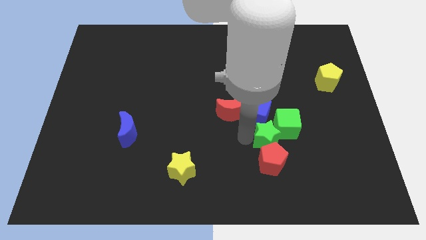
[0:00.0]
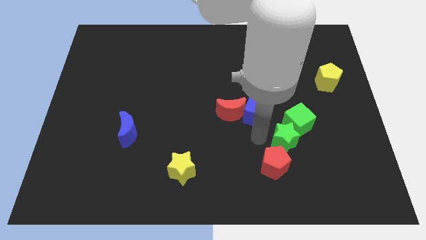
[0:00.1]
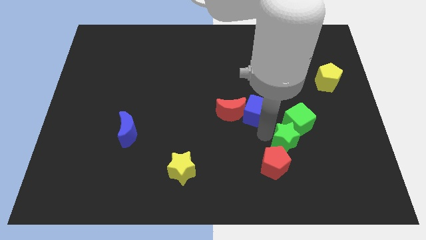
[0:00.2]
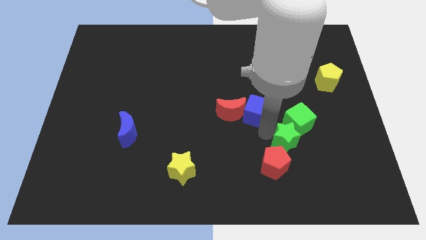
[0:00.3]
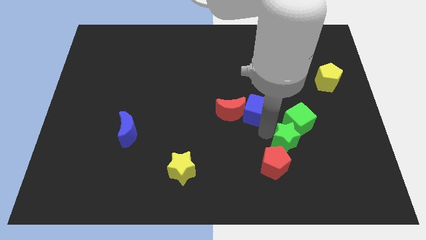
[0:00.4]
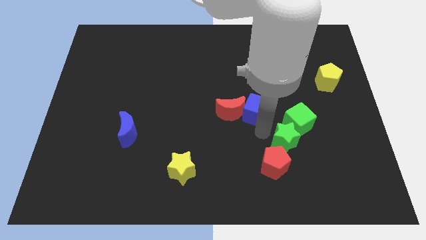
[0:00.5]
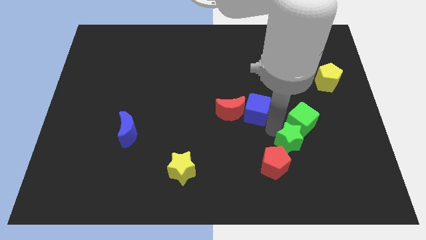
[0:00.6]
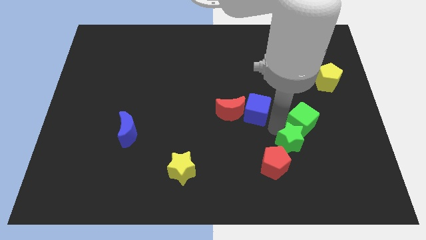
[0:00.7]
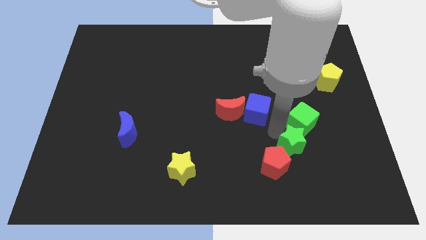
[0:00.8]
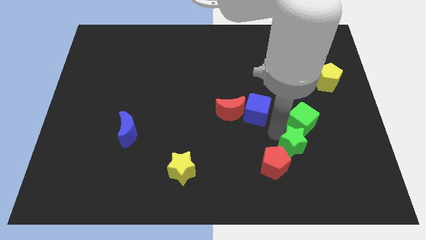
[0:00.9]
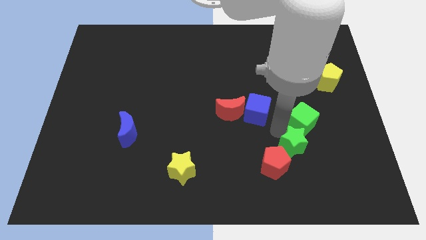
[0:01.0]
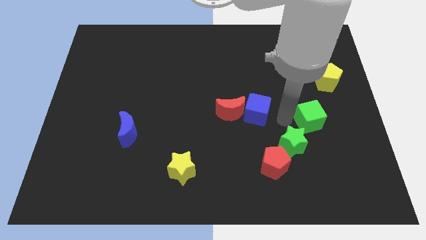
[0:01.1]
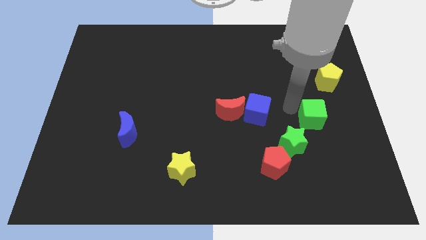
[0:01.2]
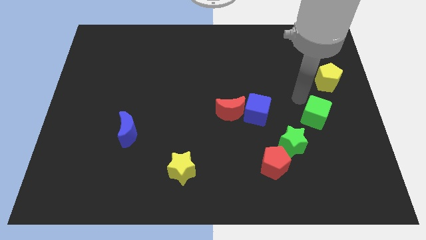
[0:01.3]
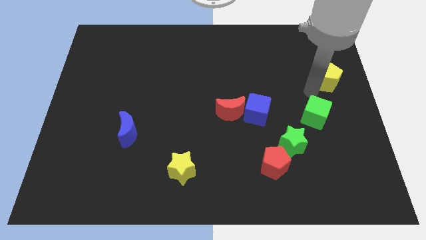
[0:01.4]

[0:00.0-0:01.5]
separate the blue cube and green cube

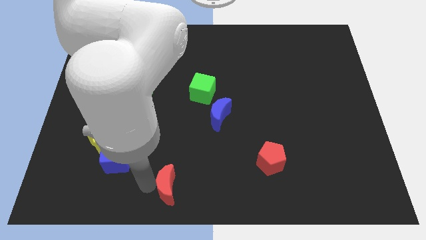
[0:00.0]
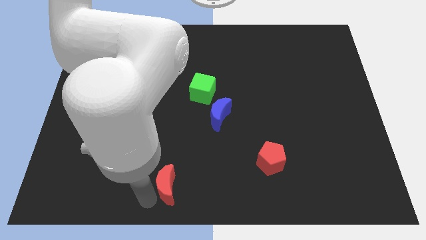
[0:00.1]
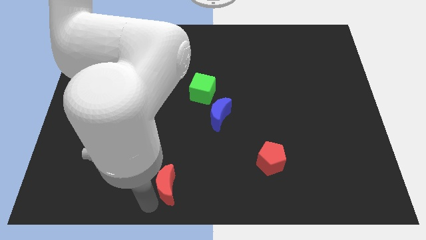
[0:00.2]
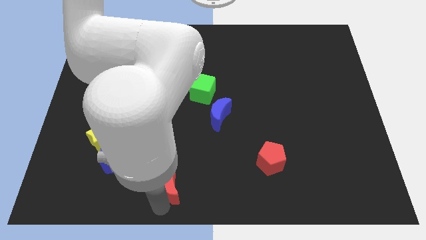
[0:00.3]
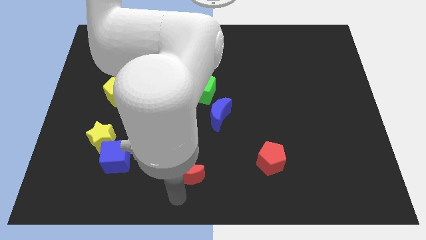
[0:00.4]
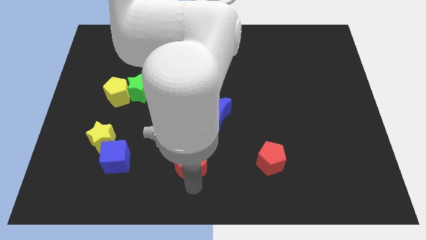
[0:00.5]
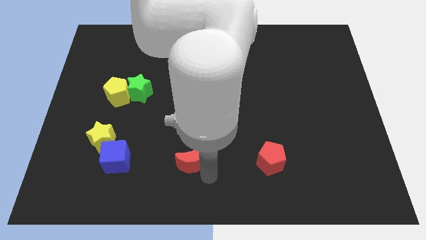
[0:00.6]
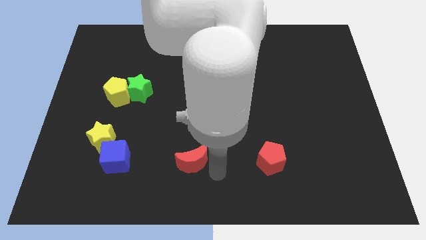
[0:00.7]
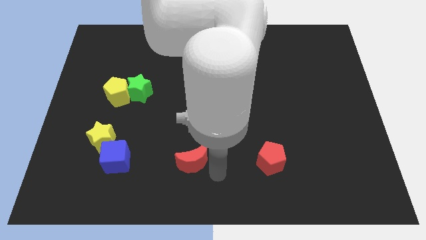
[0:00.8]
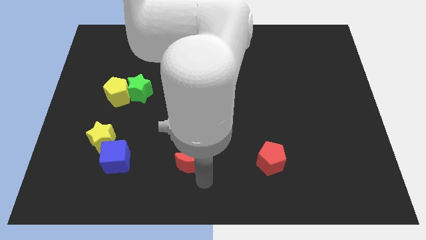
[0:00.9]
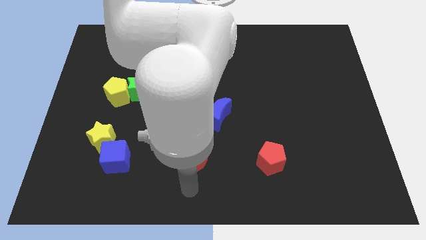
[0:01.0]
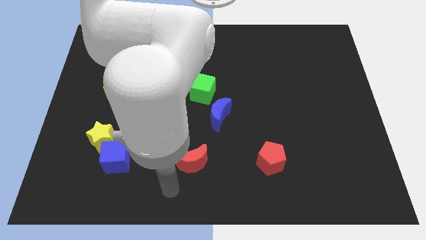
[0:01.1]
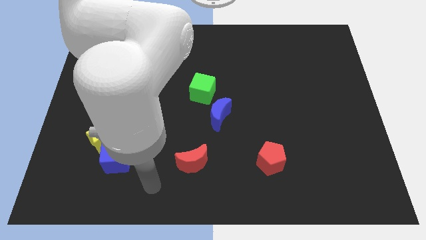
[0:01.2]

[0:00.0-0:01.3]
place the red crescent in between the blue cube and the red pentagon

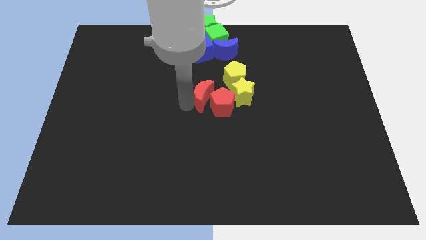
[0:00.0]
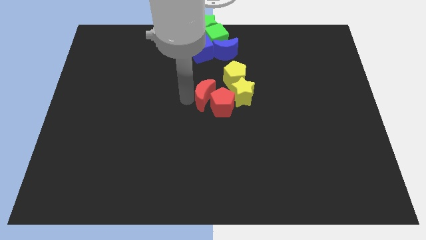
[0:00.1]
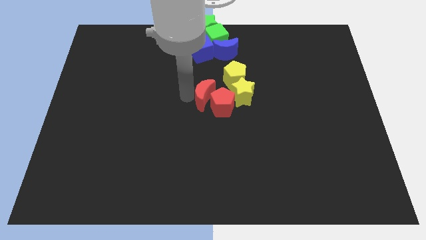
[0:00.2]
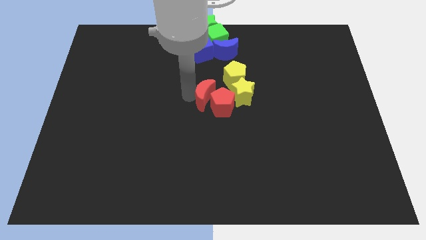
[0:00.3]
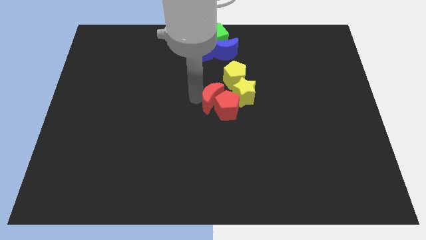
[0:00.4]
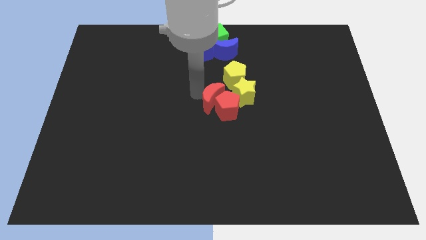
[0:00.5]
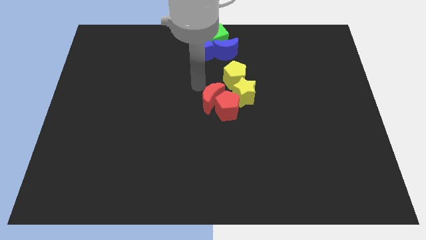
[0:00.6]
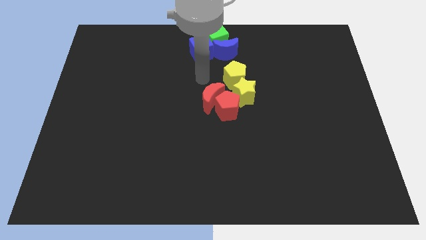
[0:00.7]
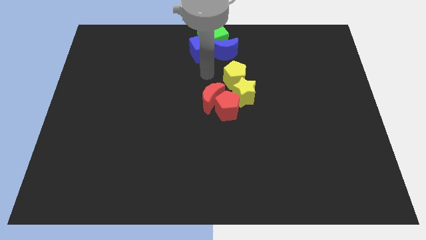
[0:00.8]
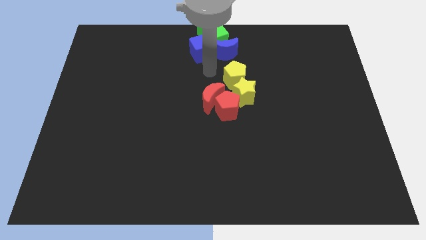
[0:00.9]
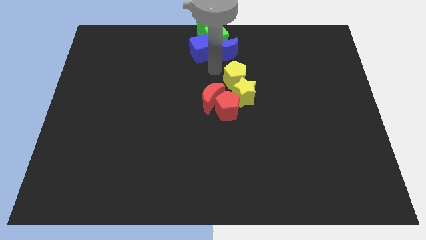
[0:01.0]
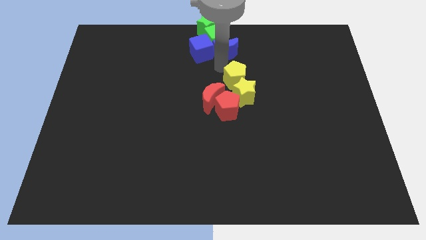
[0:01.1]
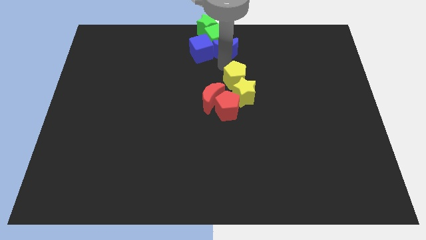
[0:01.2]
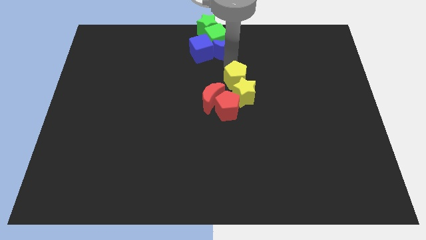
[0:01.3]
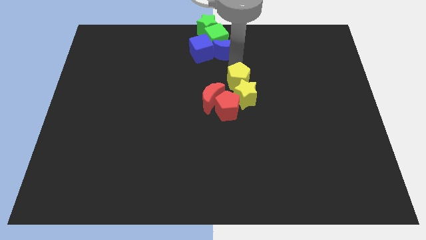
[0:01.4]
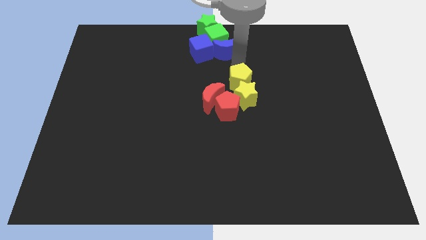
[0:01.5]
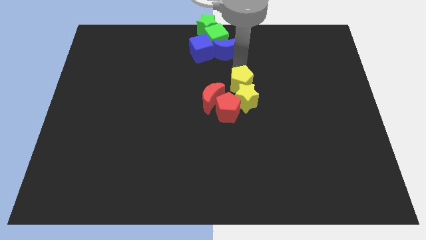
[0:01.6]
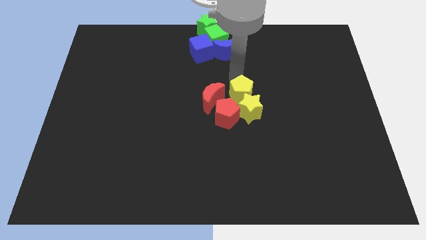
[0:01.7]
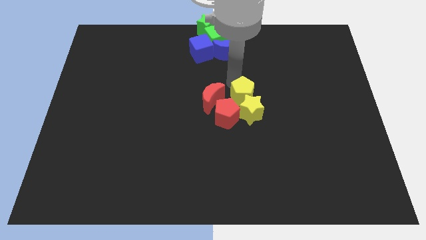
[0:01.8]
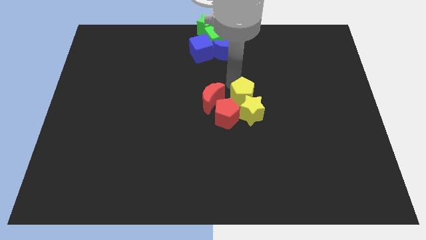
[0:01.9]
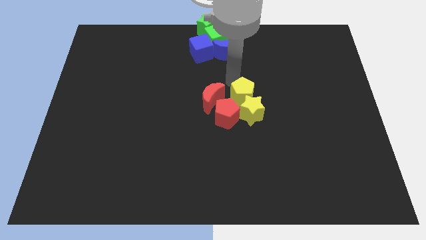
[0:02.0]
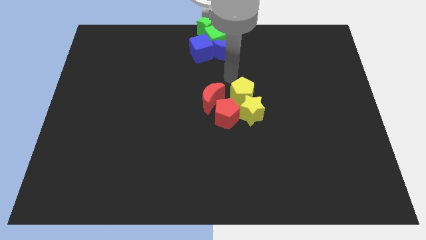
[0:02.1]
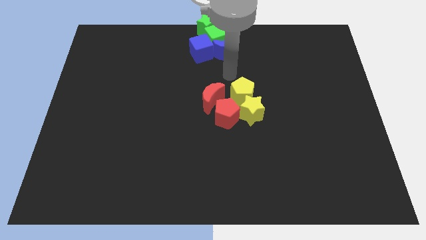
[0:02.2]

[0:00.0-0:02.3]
push the yellow pentagon into the yellow star

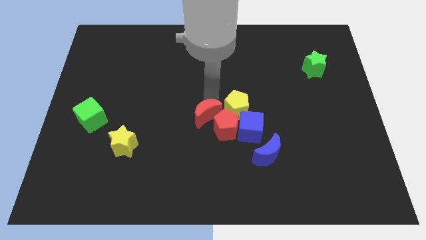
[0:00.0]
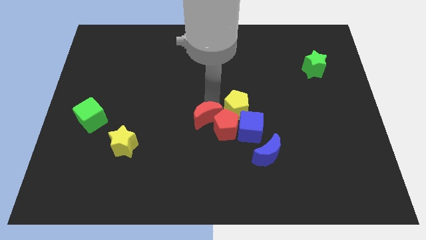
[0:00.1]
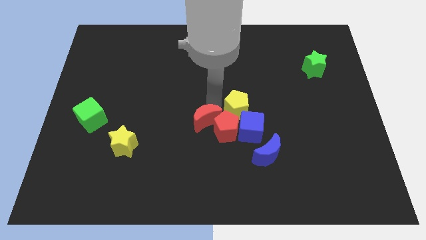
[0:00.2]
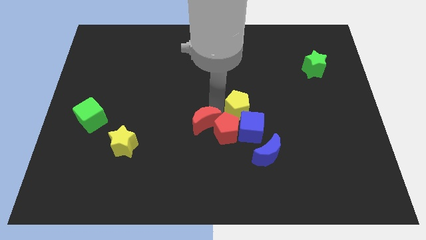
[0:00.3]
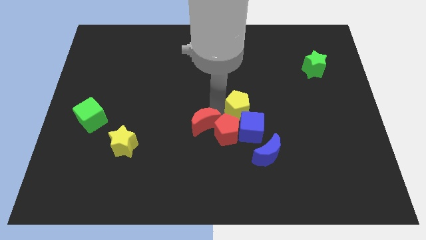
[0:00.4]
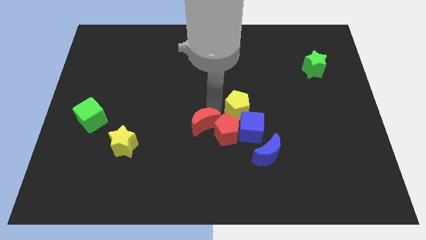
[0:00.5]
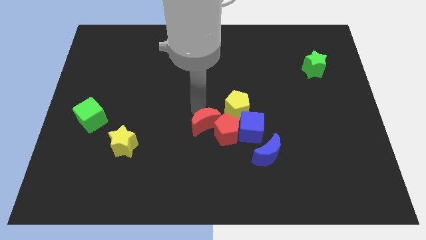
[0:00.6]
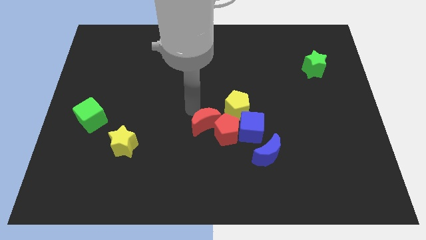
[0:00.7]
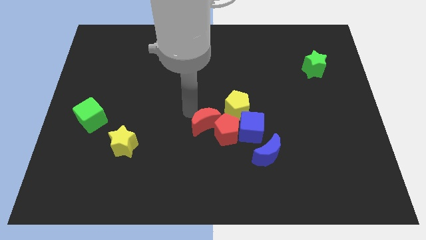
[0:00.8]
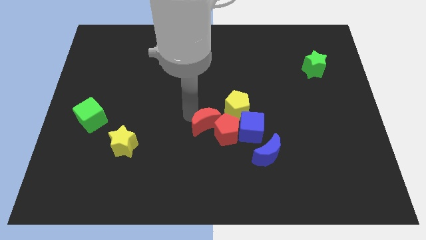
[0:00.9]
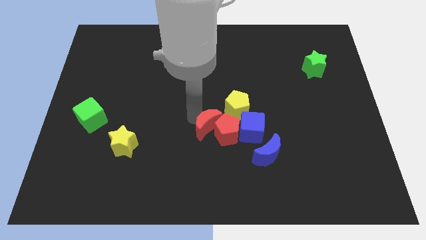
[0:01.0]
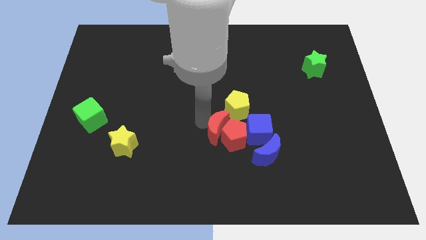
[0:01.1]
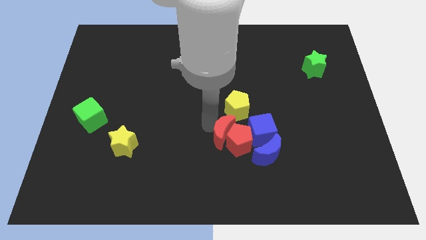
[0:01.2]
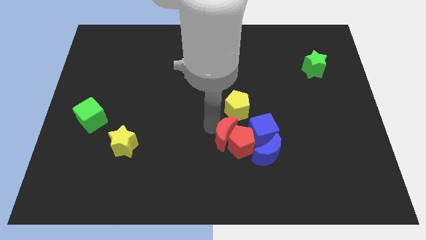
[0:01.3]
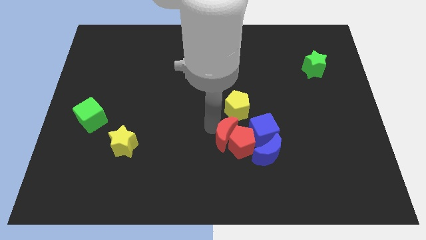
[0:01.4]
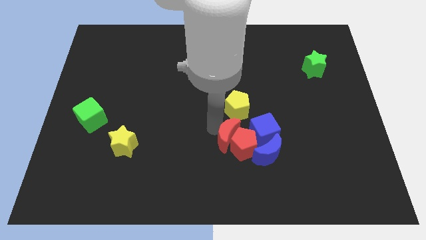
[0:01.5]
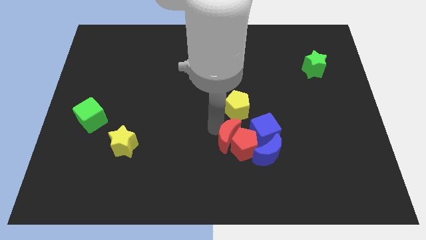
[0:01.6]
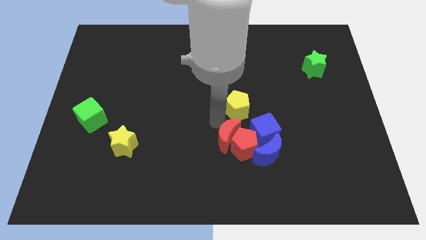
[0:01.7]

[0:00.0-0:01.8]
push the red blocks into the blue blocks

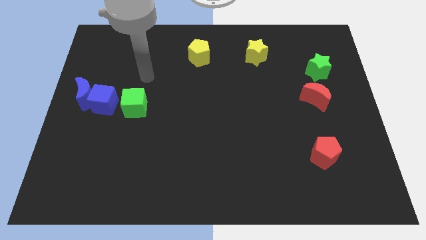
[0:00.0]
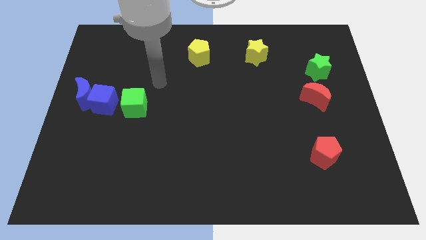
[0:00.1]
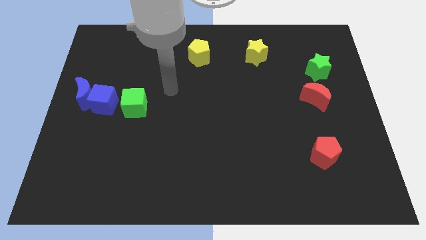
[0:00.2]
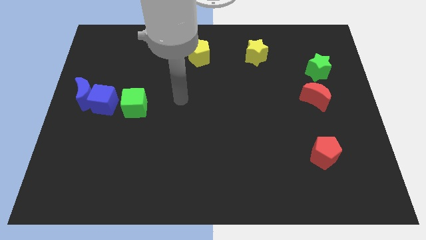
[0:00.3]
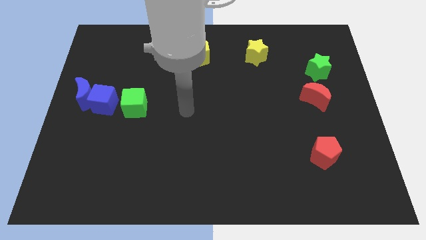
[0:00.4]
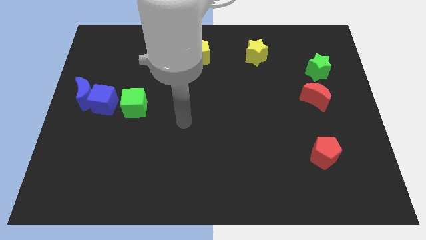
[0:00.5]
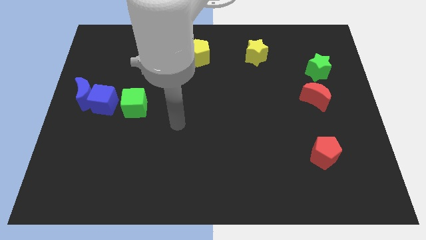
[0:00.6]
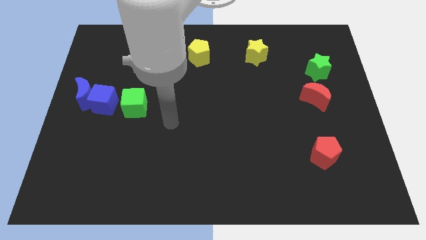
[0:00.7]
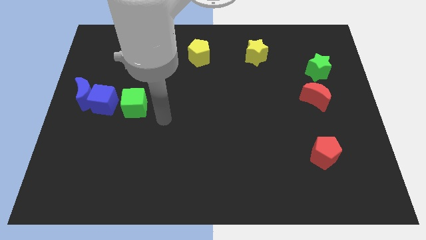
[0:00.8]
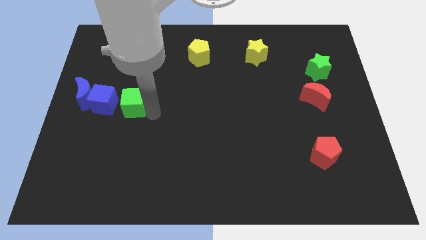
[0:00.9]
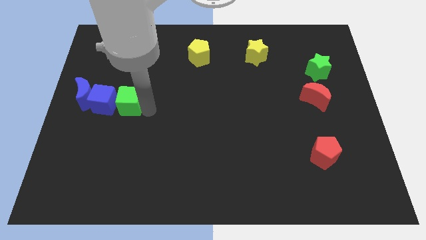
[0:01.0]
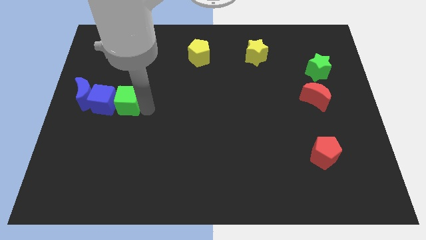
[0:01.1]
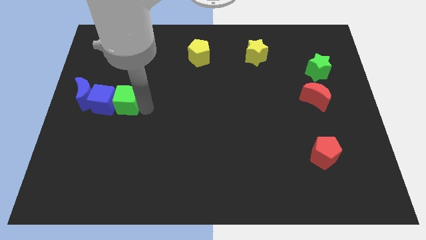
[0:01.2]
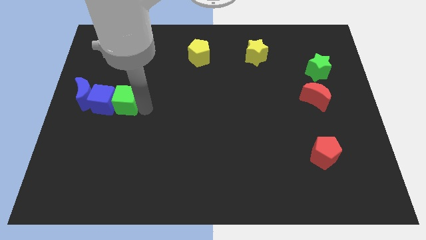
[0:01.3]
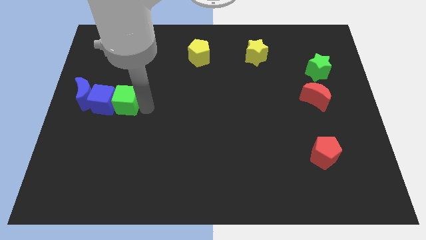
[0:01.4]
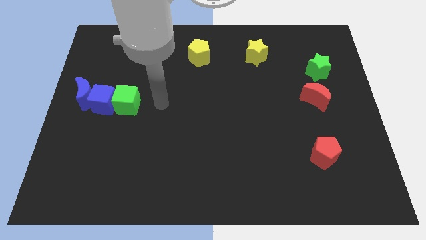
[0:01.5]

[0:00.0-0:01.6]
push green cube into blue cube

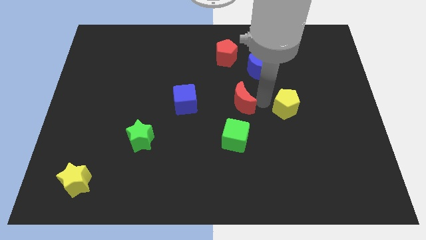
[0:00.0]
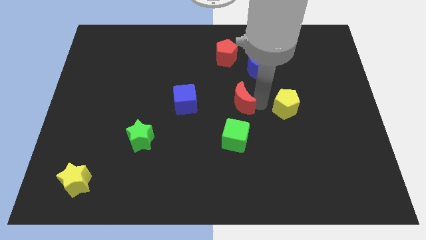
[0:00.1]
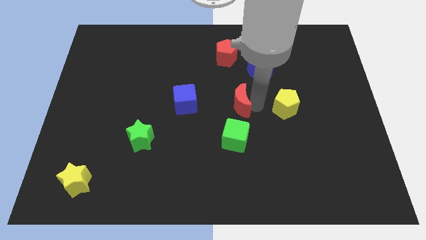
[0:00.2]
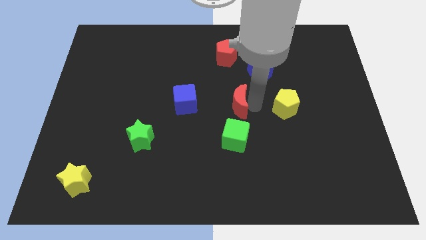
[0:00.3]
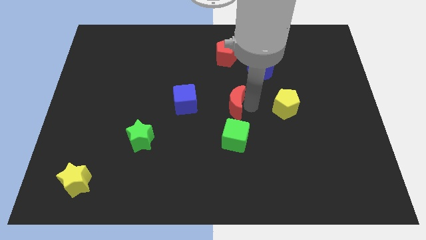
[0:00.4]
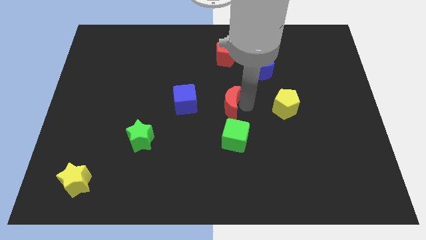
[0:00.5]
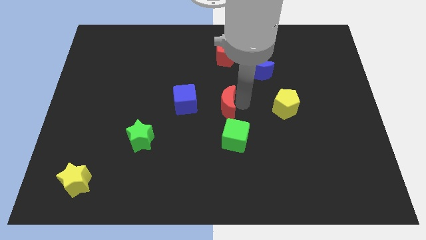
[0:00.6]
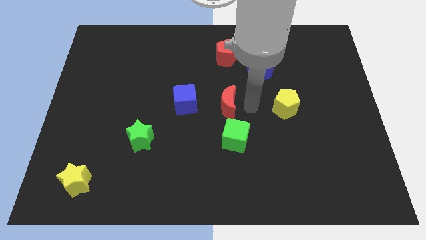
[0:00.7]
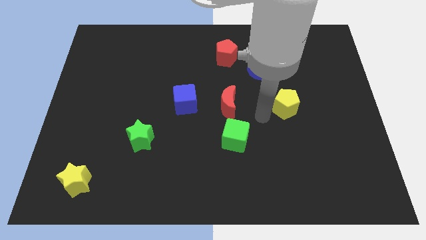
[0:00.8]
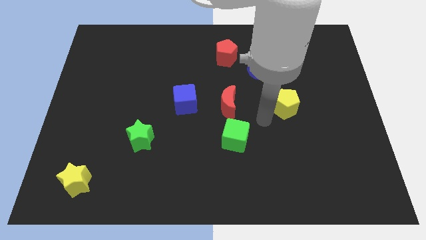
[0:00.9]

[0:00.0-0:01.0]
place the red crescent above the green cube
